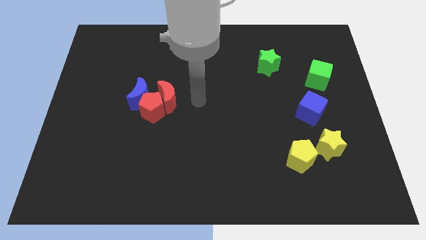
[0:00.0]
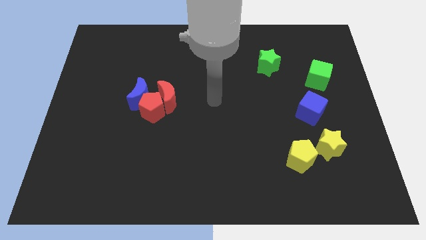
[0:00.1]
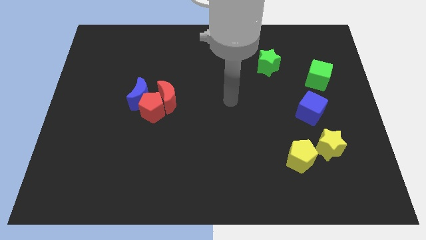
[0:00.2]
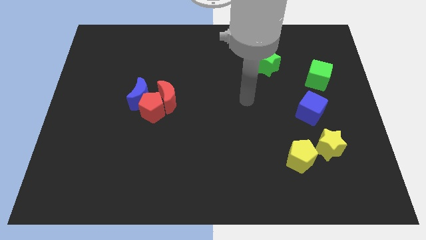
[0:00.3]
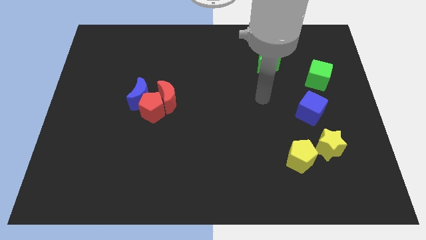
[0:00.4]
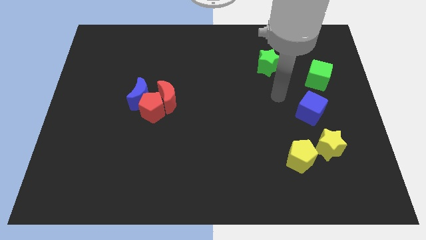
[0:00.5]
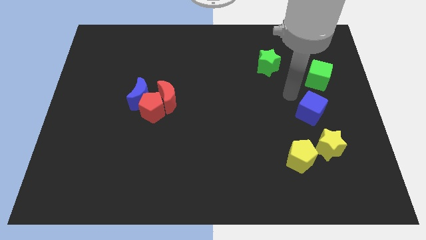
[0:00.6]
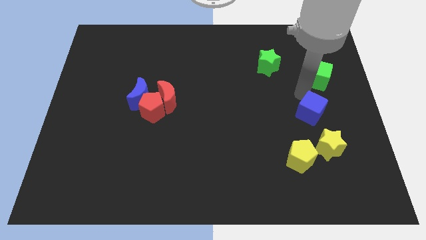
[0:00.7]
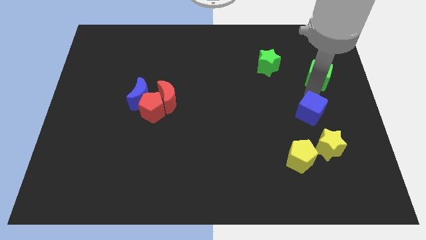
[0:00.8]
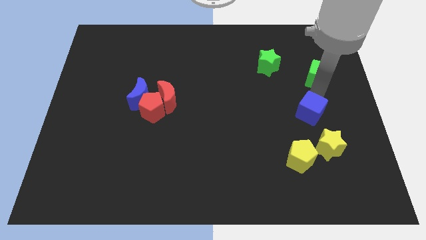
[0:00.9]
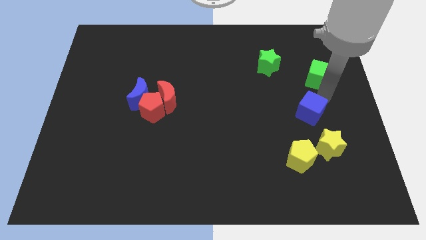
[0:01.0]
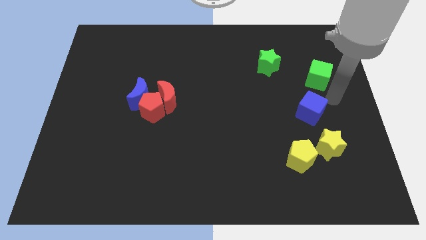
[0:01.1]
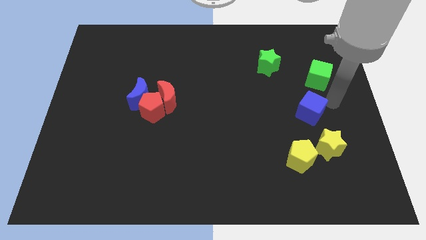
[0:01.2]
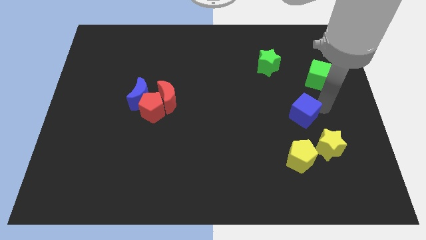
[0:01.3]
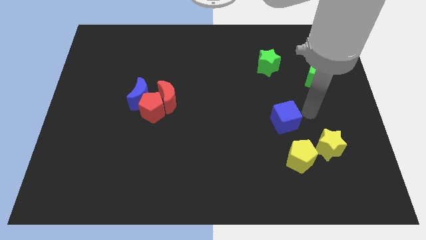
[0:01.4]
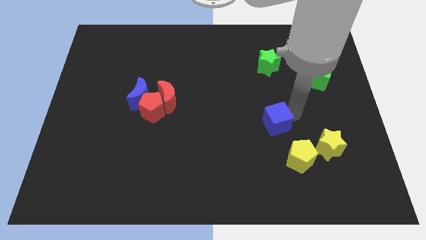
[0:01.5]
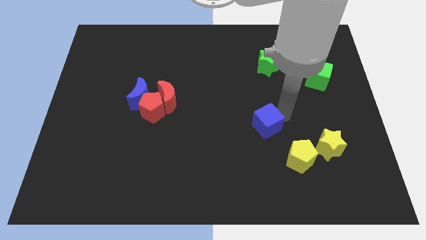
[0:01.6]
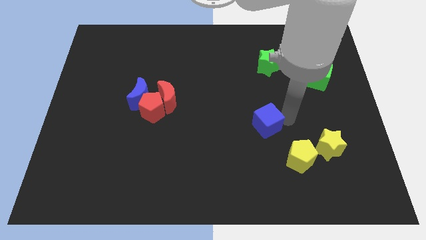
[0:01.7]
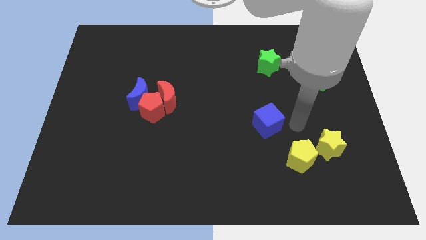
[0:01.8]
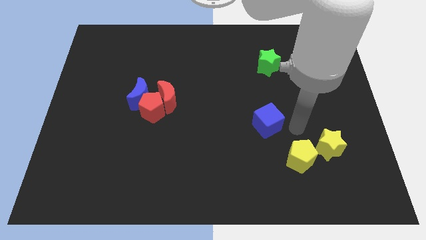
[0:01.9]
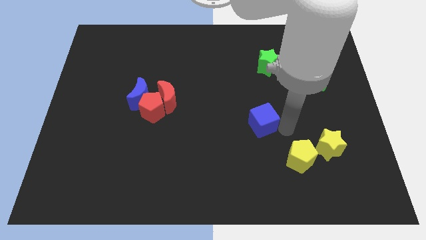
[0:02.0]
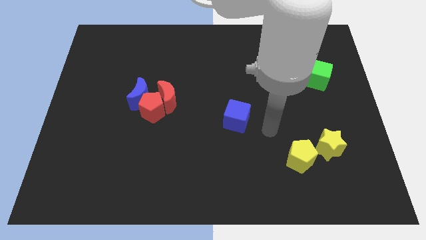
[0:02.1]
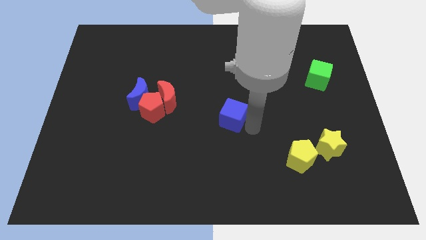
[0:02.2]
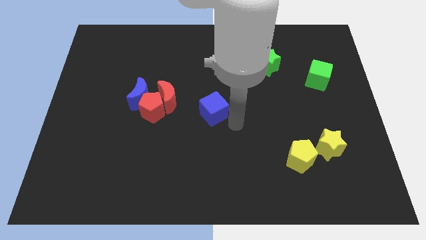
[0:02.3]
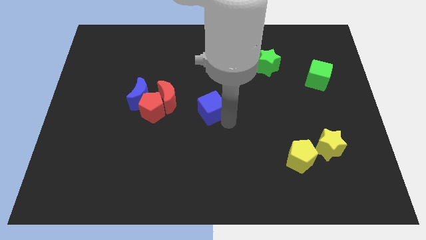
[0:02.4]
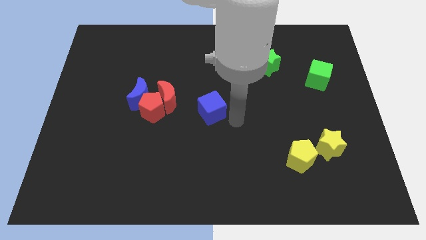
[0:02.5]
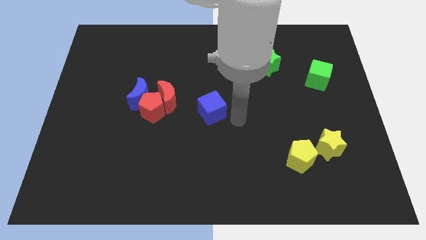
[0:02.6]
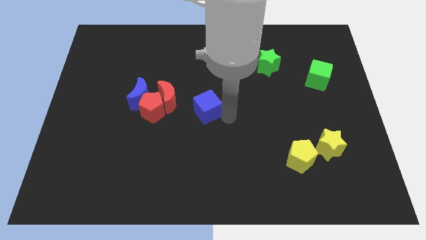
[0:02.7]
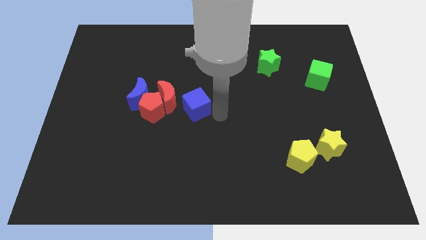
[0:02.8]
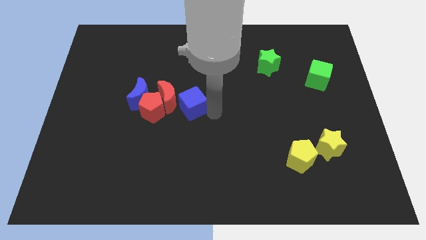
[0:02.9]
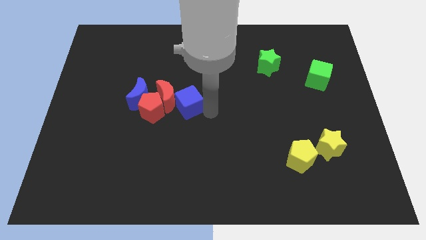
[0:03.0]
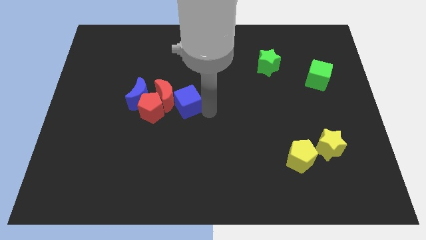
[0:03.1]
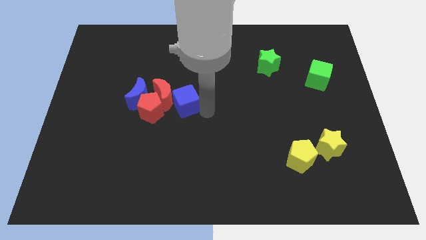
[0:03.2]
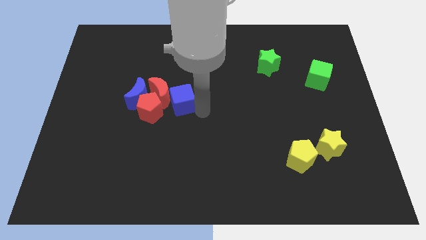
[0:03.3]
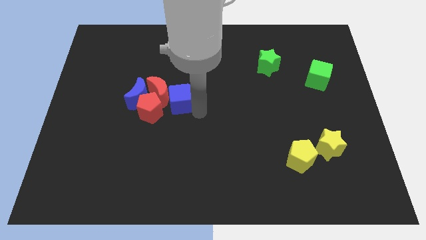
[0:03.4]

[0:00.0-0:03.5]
move blue cube right below the red moon

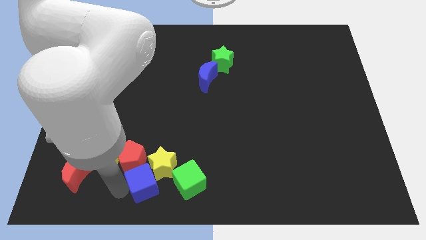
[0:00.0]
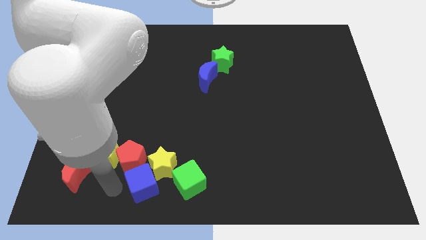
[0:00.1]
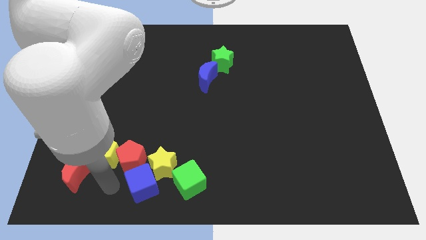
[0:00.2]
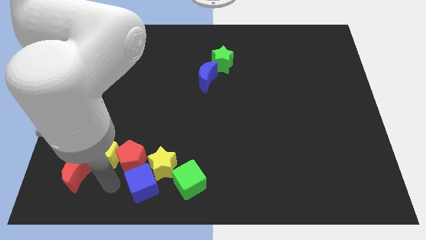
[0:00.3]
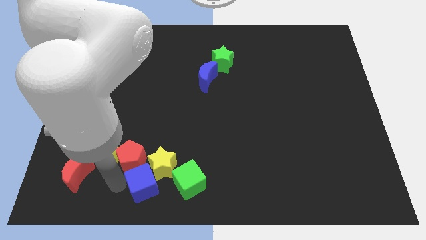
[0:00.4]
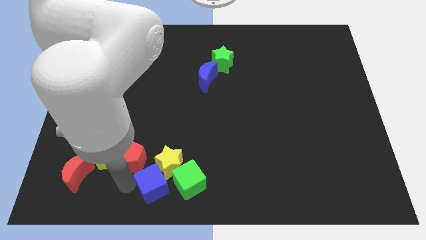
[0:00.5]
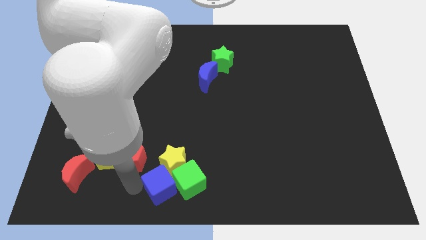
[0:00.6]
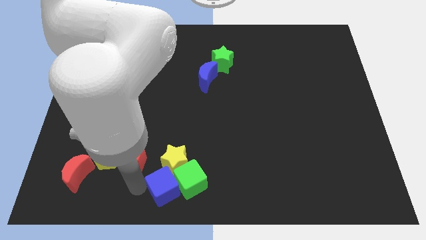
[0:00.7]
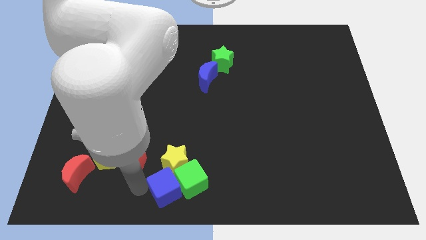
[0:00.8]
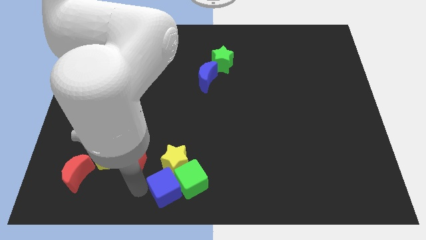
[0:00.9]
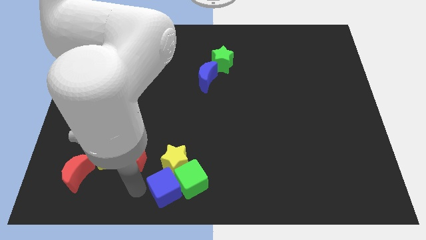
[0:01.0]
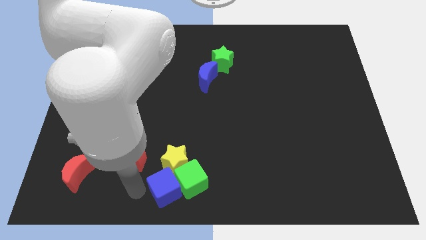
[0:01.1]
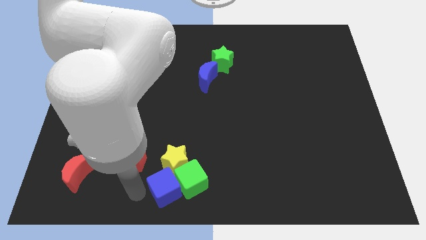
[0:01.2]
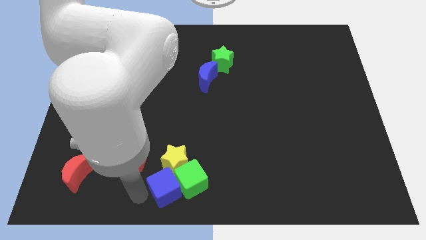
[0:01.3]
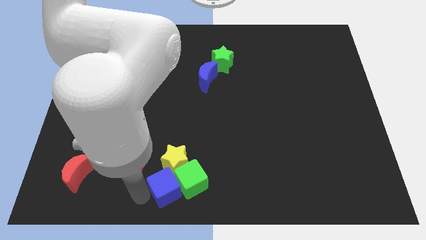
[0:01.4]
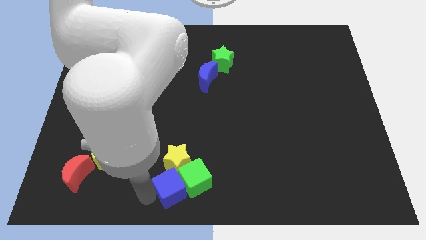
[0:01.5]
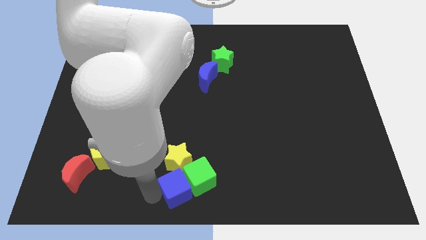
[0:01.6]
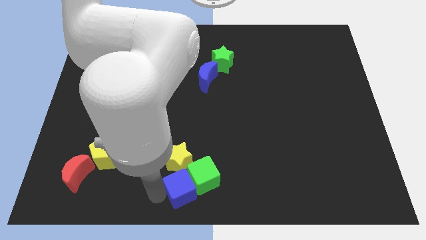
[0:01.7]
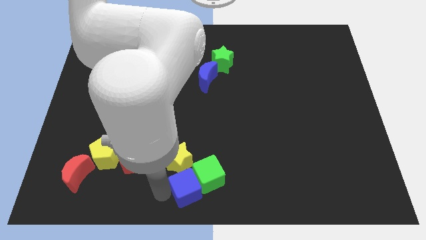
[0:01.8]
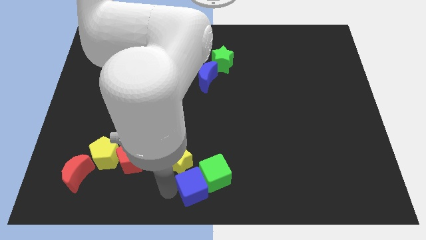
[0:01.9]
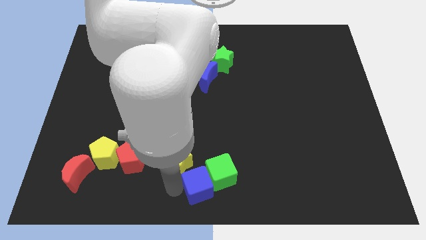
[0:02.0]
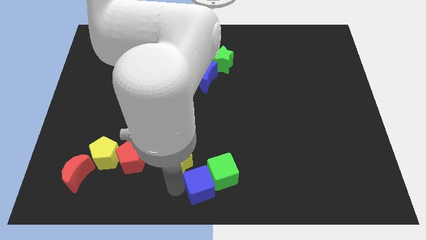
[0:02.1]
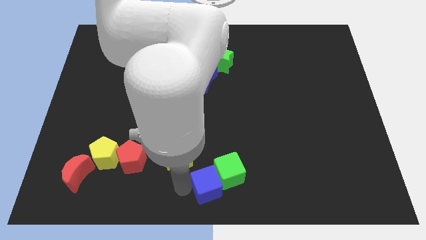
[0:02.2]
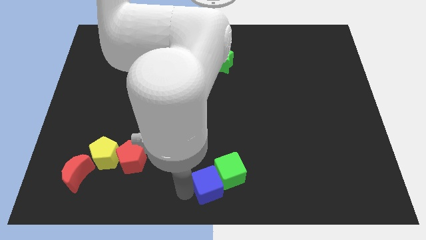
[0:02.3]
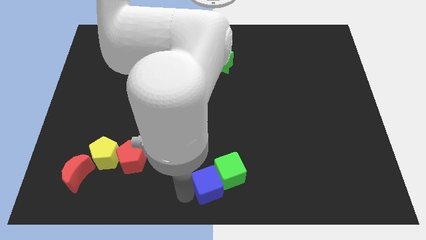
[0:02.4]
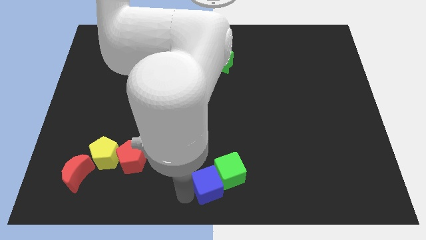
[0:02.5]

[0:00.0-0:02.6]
push the blue cube and green cube slightly upwards

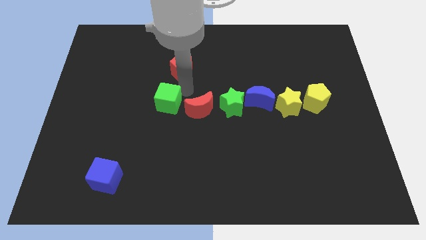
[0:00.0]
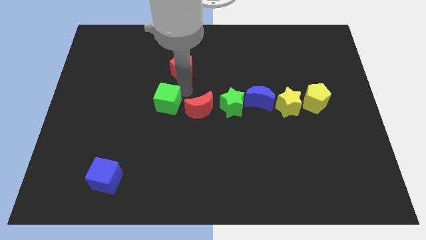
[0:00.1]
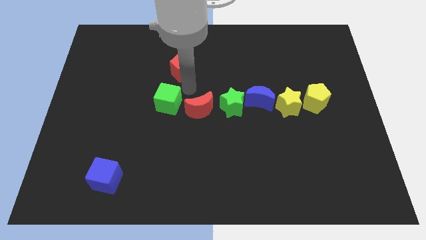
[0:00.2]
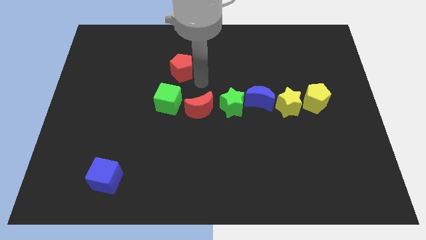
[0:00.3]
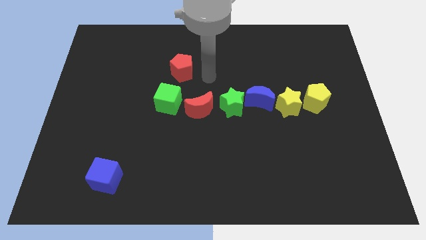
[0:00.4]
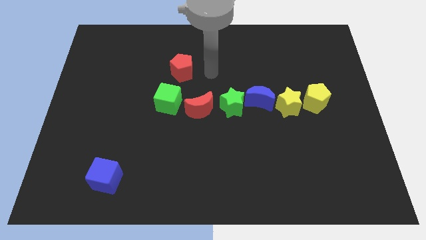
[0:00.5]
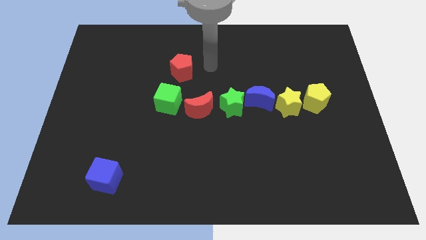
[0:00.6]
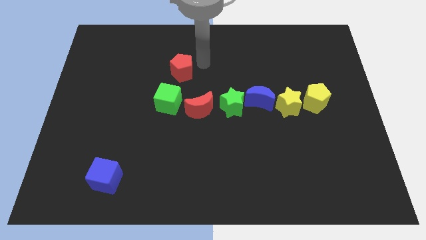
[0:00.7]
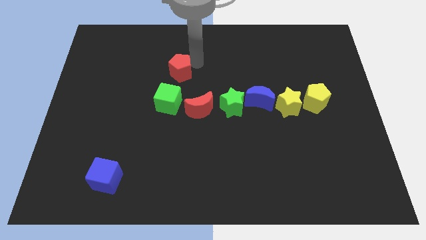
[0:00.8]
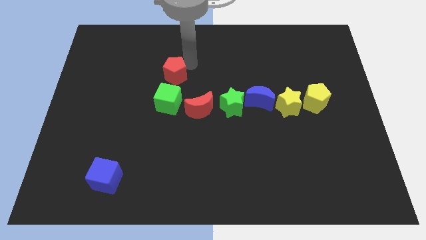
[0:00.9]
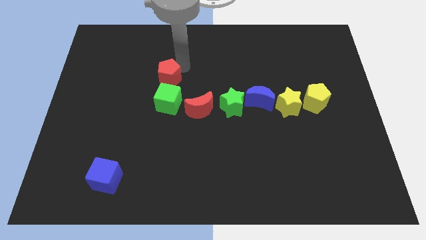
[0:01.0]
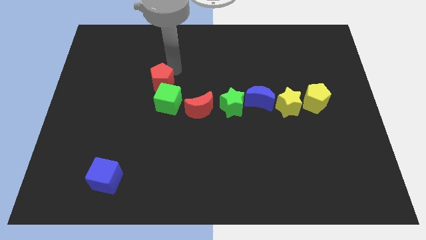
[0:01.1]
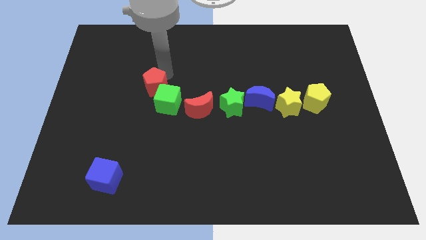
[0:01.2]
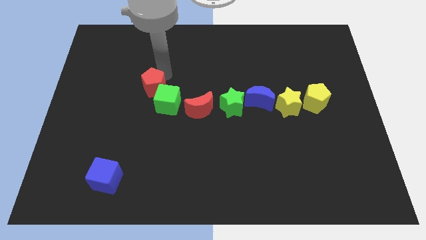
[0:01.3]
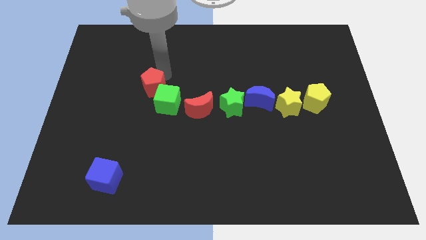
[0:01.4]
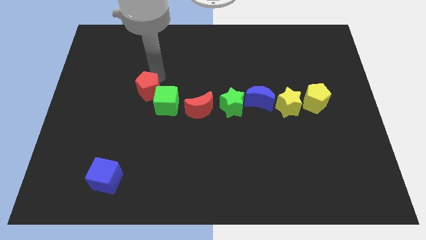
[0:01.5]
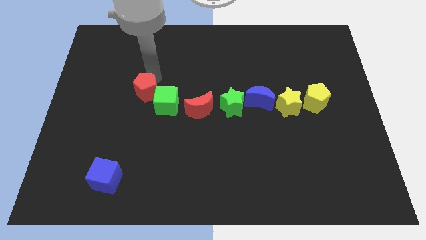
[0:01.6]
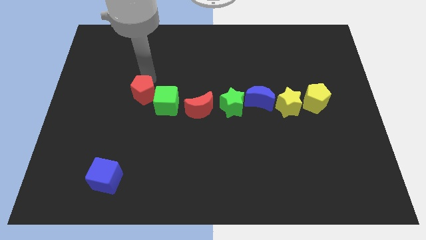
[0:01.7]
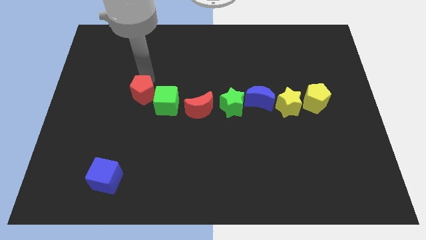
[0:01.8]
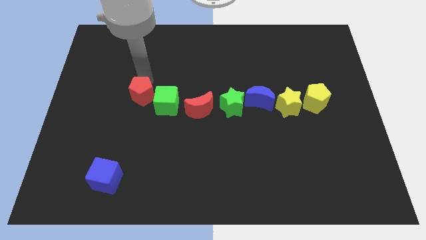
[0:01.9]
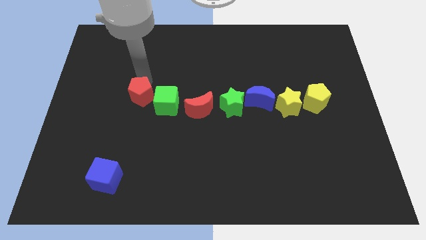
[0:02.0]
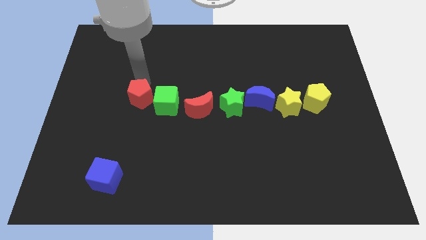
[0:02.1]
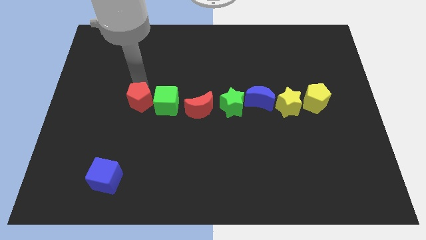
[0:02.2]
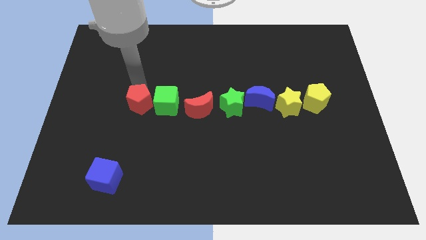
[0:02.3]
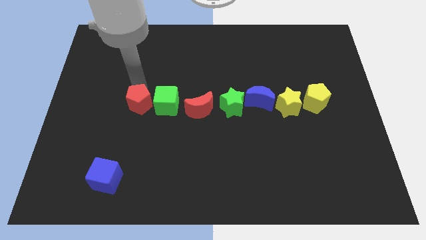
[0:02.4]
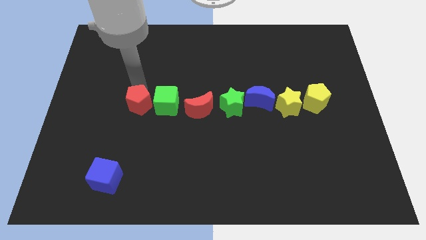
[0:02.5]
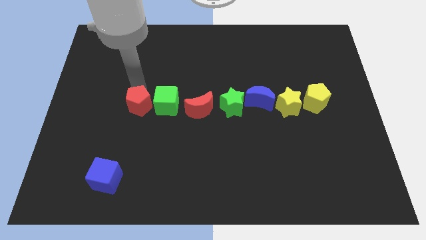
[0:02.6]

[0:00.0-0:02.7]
push red pentagon beside green cube

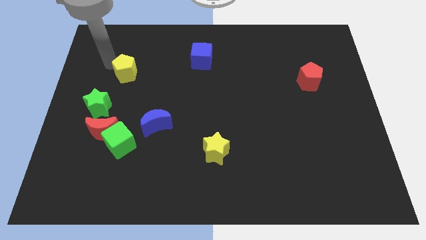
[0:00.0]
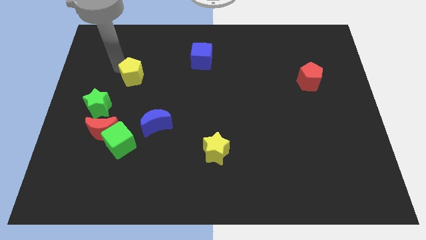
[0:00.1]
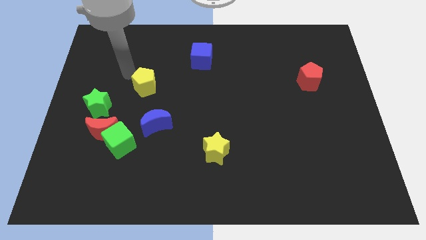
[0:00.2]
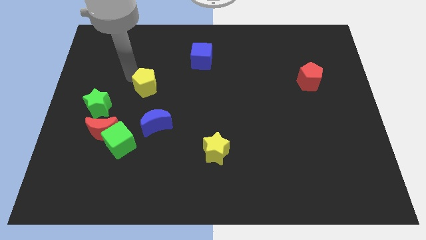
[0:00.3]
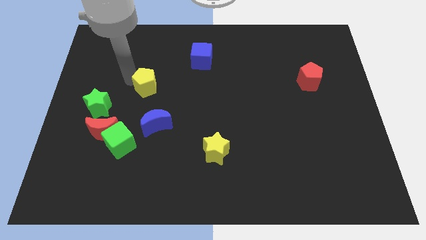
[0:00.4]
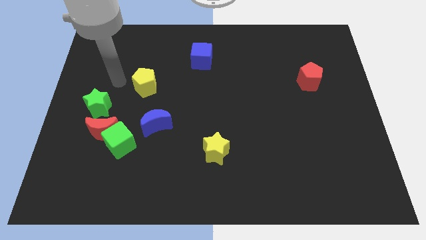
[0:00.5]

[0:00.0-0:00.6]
move the yellow pentagon to the center
